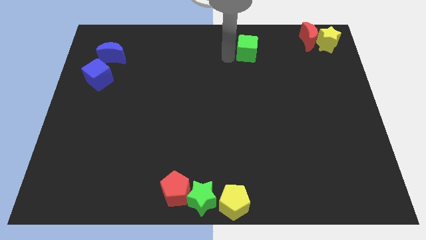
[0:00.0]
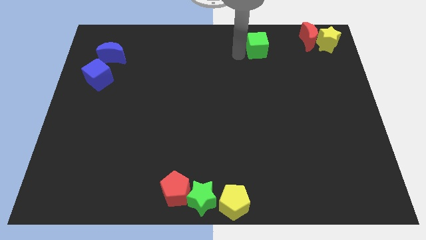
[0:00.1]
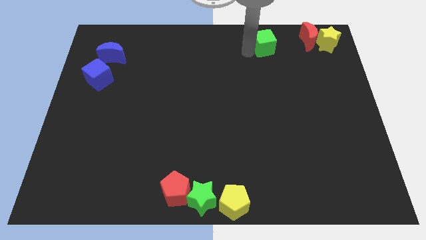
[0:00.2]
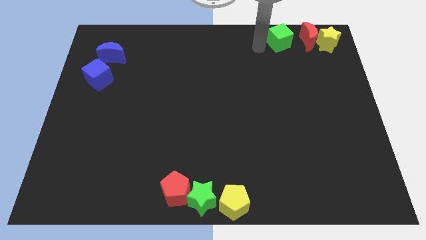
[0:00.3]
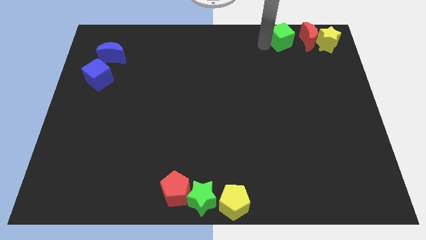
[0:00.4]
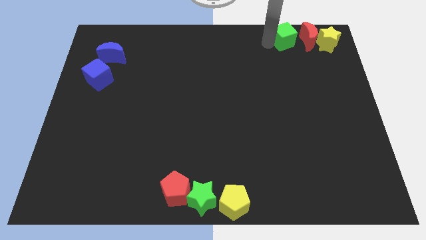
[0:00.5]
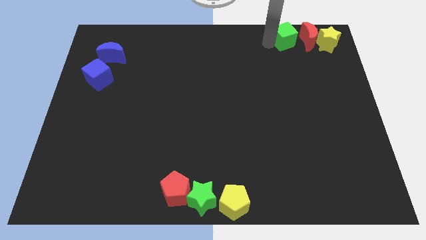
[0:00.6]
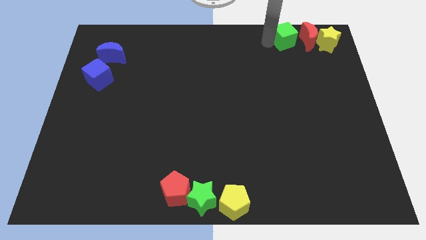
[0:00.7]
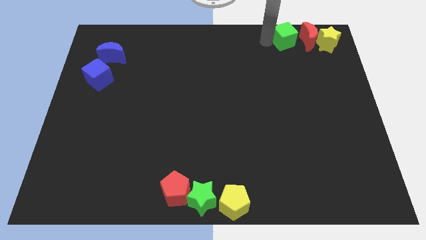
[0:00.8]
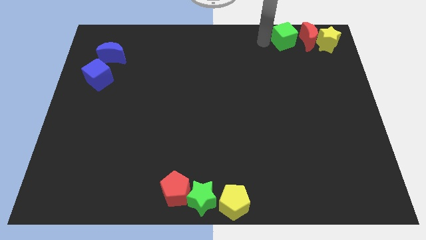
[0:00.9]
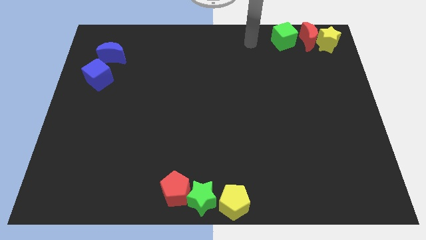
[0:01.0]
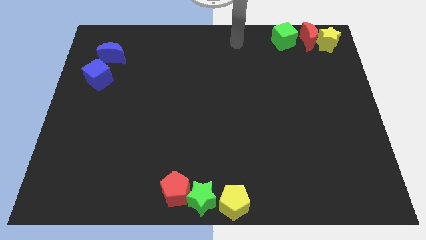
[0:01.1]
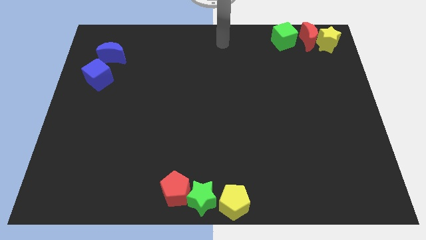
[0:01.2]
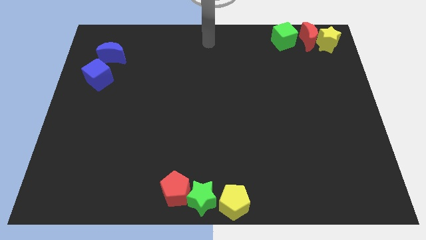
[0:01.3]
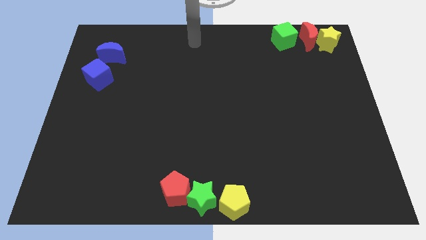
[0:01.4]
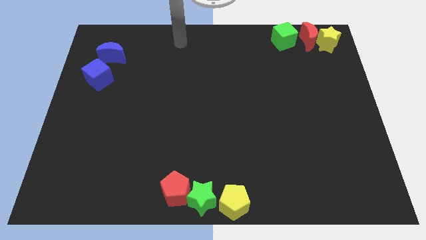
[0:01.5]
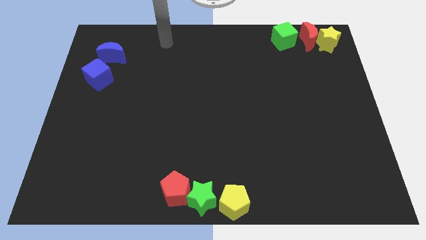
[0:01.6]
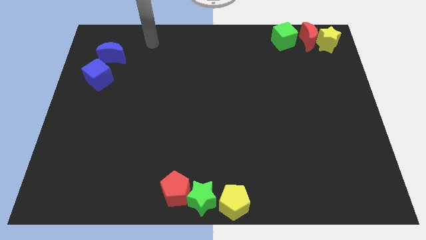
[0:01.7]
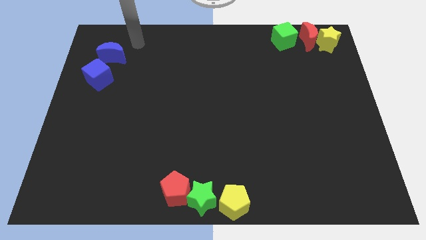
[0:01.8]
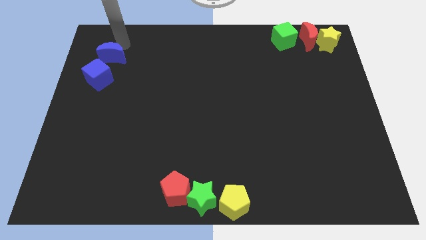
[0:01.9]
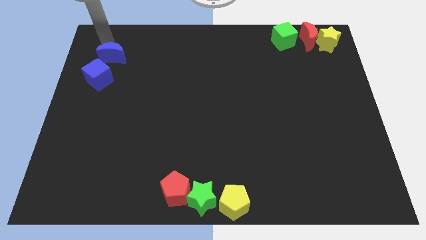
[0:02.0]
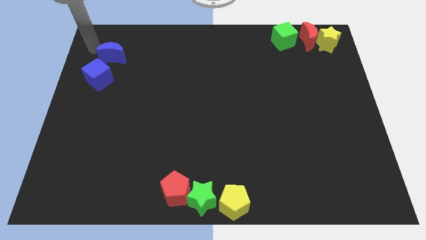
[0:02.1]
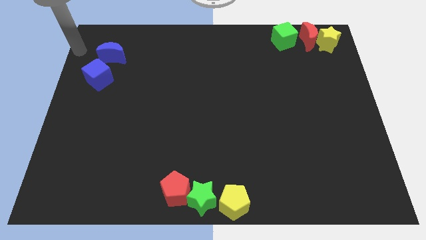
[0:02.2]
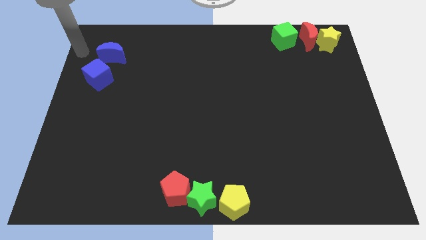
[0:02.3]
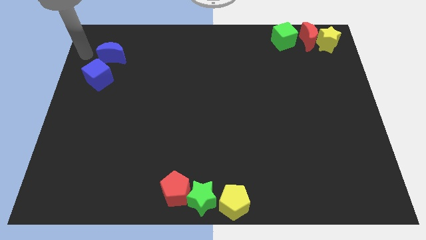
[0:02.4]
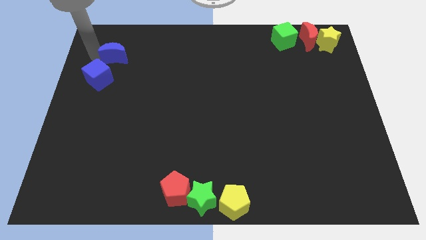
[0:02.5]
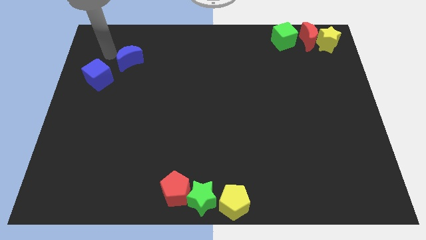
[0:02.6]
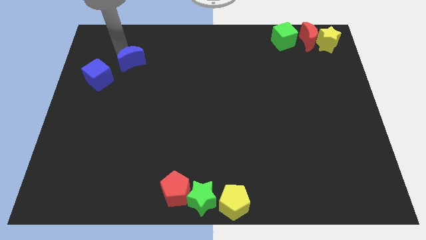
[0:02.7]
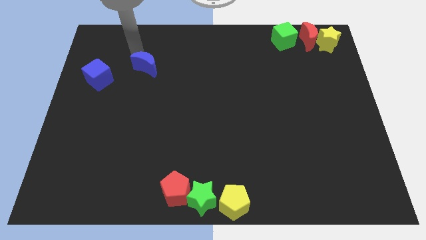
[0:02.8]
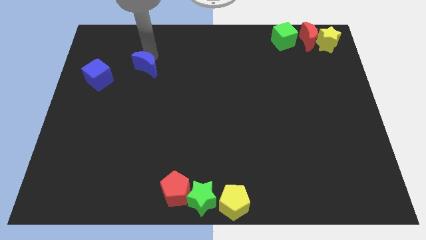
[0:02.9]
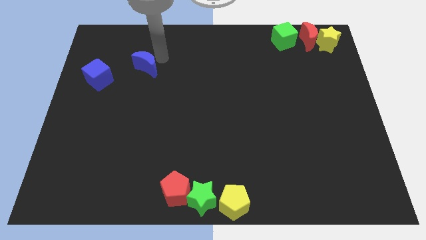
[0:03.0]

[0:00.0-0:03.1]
drag the green cube and place it close to the red moon

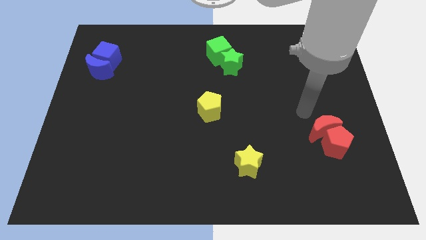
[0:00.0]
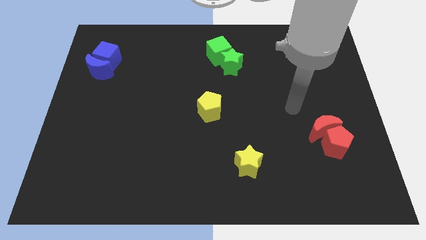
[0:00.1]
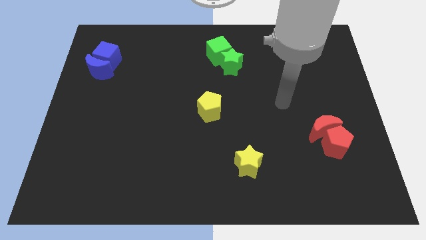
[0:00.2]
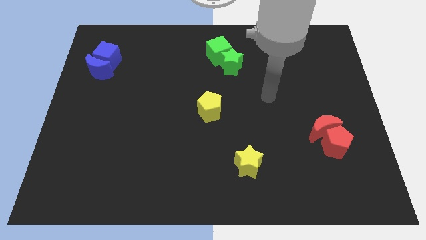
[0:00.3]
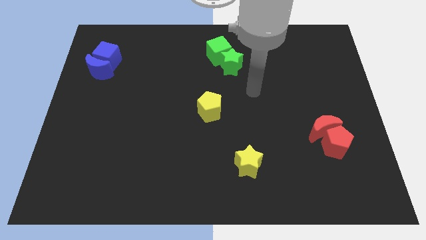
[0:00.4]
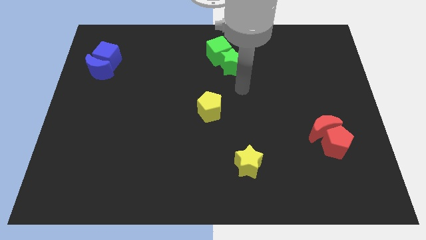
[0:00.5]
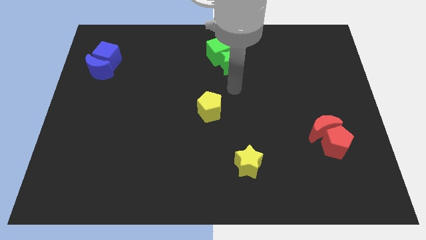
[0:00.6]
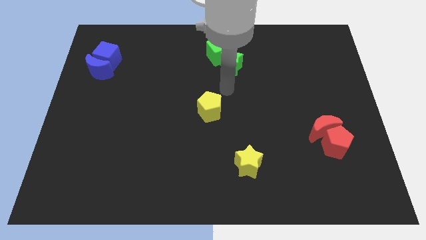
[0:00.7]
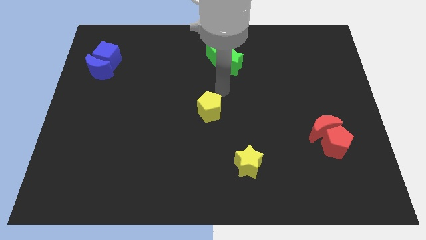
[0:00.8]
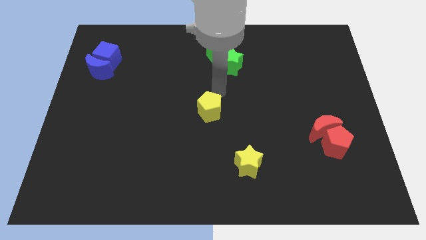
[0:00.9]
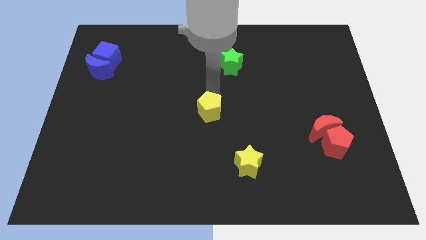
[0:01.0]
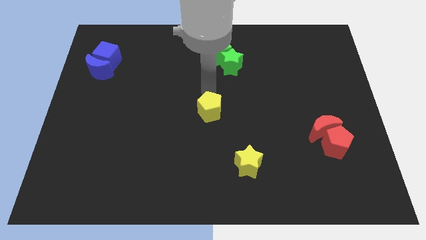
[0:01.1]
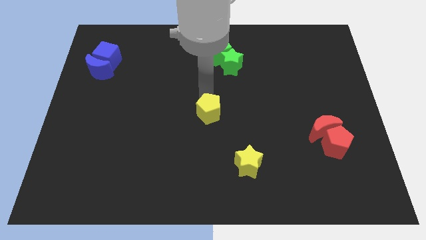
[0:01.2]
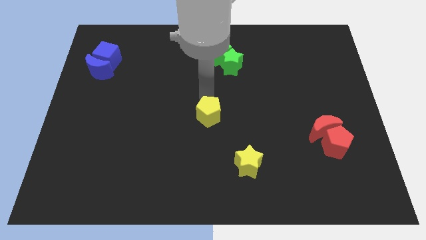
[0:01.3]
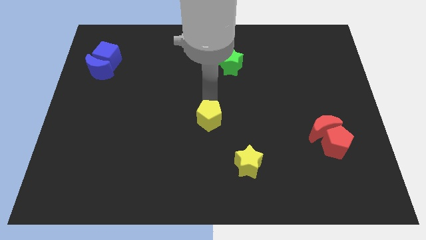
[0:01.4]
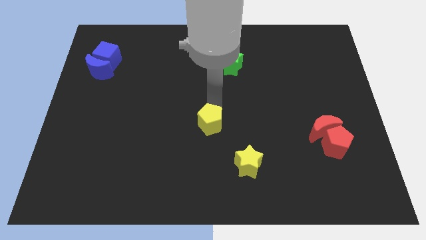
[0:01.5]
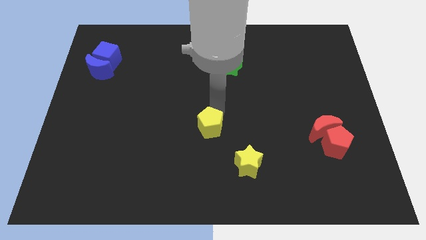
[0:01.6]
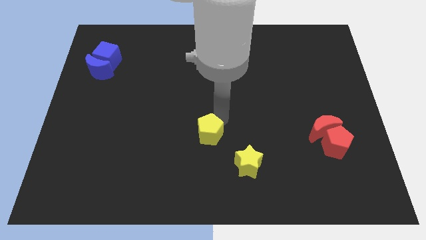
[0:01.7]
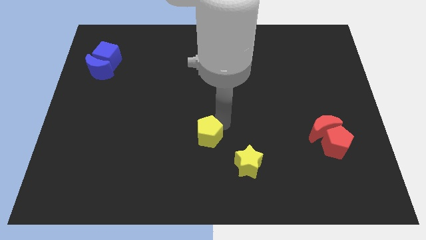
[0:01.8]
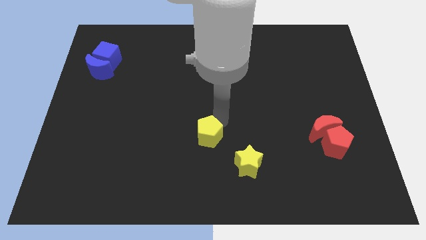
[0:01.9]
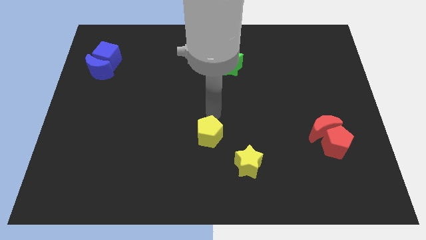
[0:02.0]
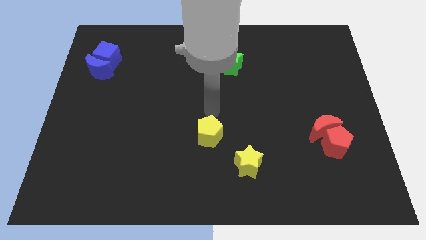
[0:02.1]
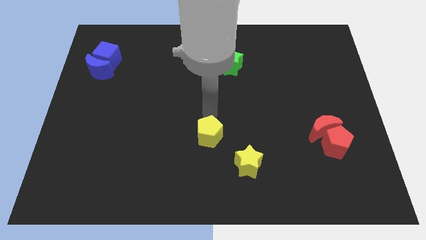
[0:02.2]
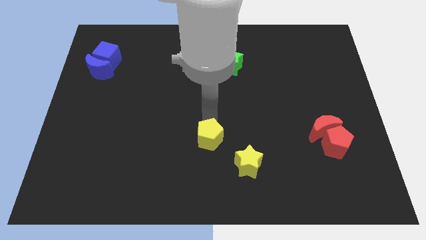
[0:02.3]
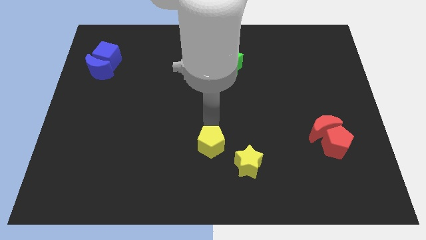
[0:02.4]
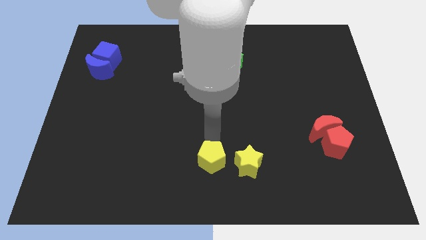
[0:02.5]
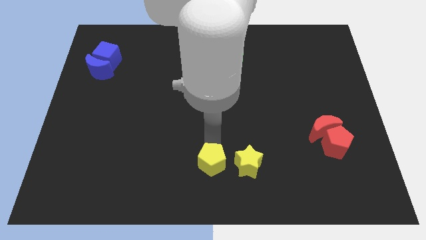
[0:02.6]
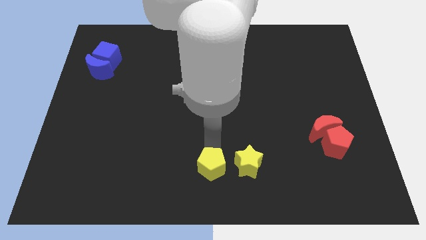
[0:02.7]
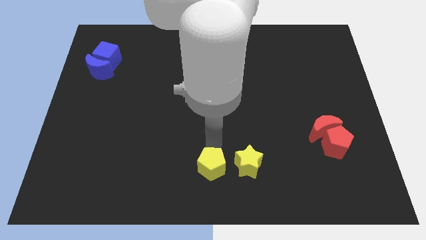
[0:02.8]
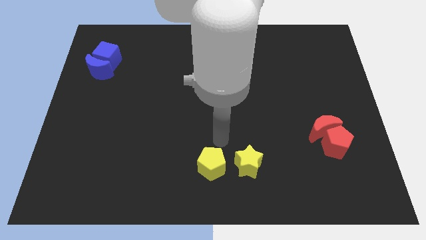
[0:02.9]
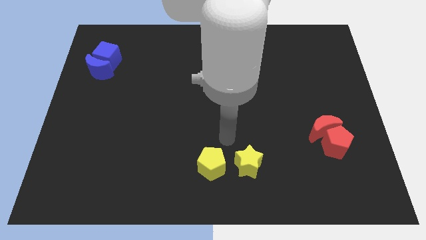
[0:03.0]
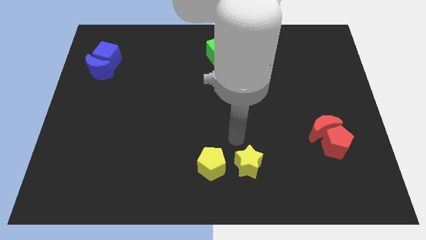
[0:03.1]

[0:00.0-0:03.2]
move the yellow pentagon towards left to the yellow star

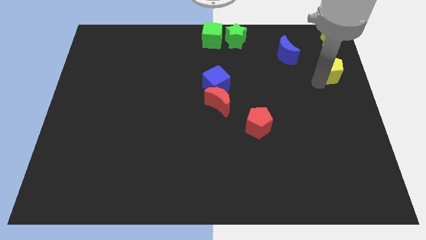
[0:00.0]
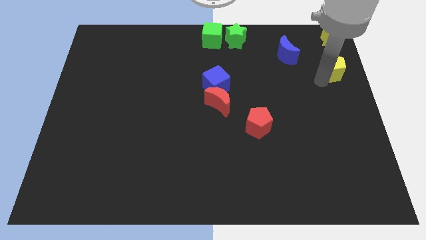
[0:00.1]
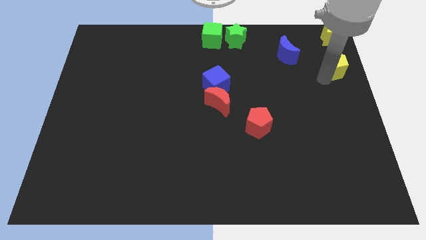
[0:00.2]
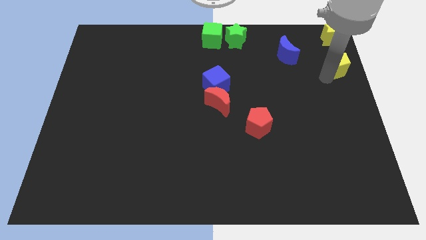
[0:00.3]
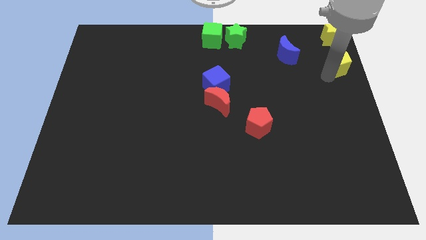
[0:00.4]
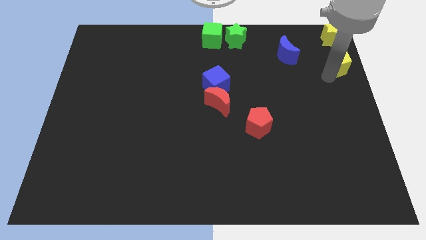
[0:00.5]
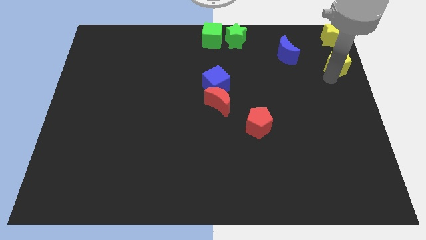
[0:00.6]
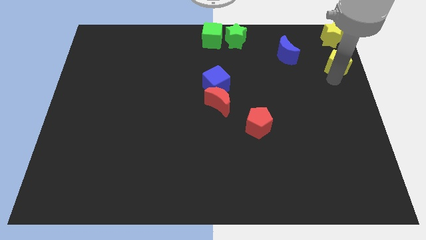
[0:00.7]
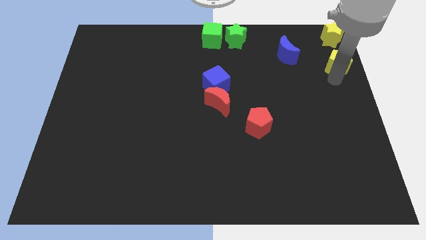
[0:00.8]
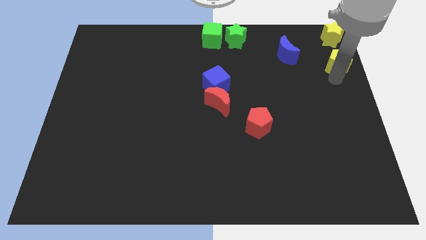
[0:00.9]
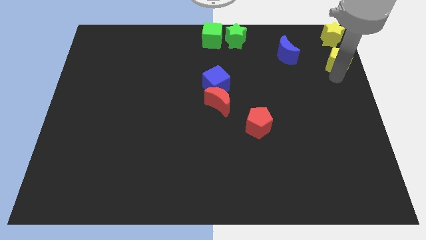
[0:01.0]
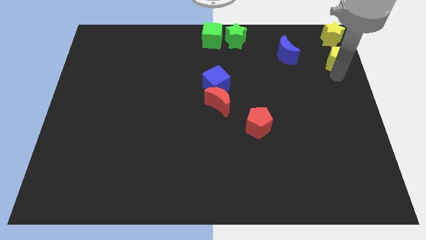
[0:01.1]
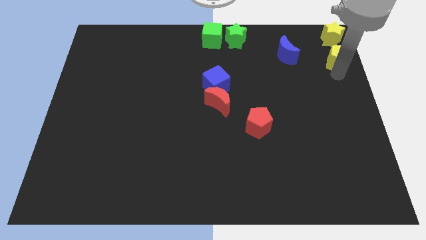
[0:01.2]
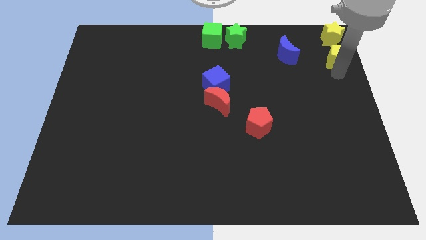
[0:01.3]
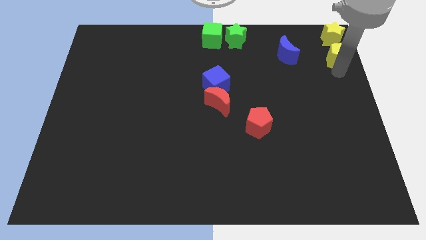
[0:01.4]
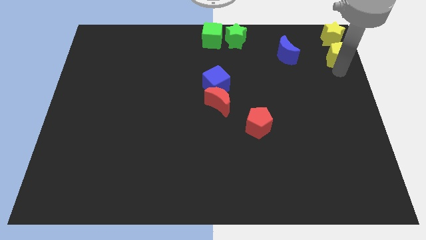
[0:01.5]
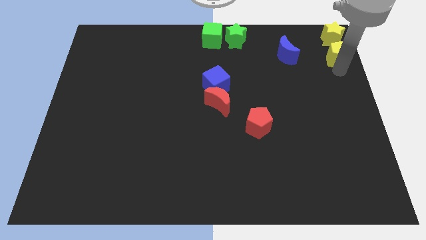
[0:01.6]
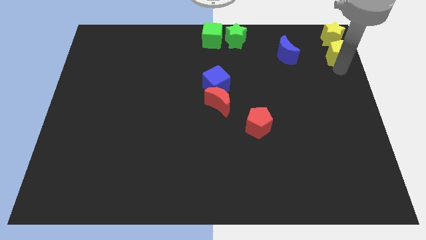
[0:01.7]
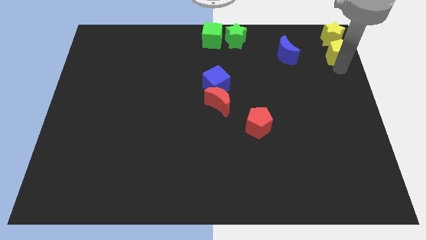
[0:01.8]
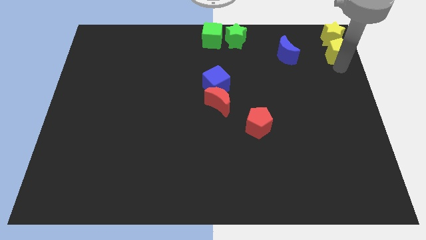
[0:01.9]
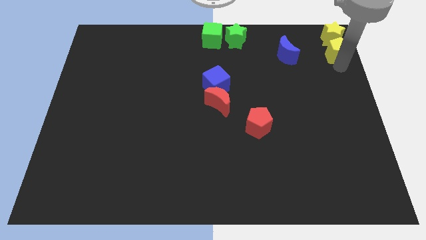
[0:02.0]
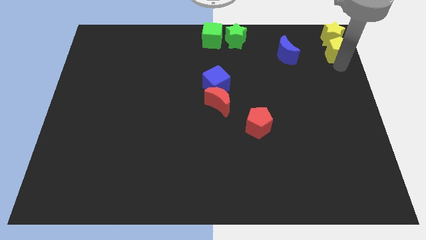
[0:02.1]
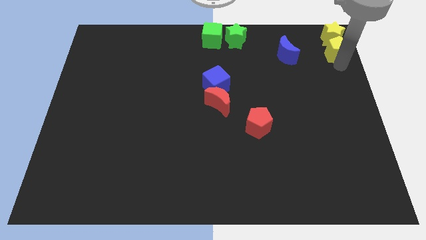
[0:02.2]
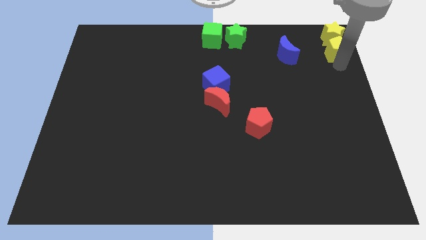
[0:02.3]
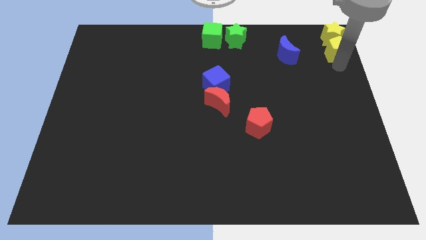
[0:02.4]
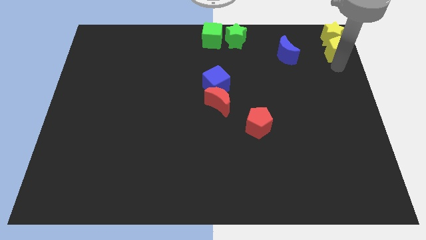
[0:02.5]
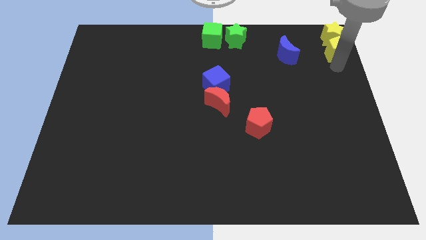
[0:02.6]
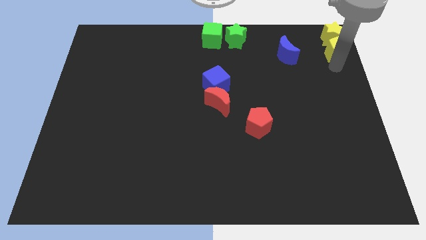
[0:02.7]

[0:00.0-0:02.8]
push the yellow pentagon to the bottom side of the yellow star
